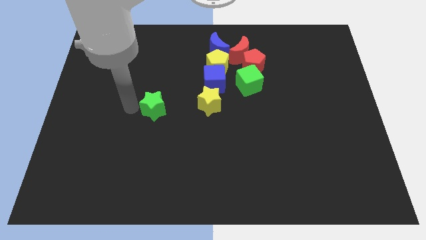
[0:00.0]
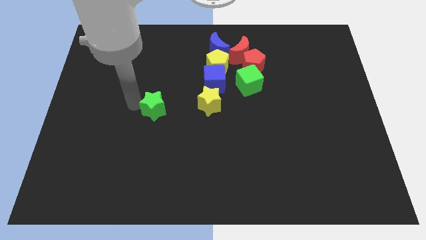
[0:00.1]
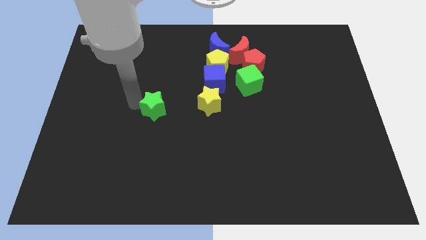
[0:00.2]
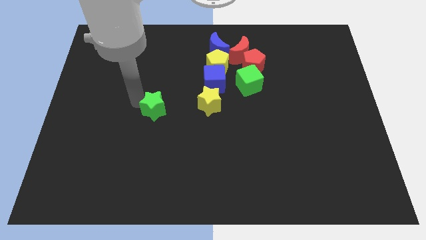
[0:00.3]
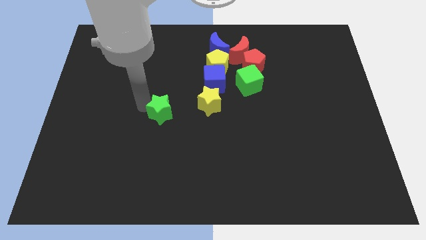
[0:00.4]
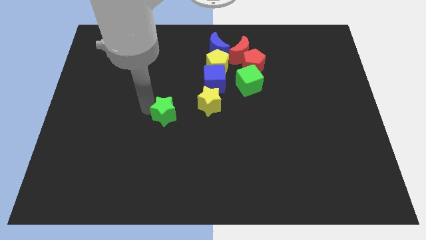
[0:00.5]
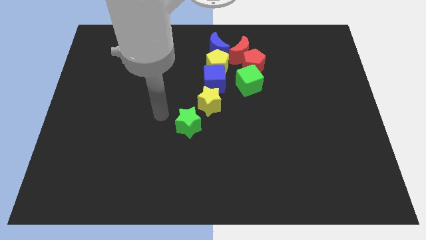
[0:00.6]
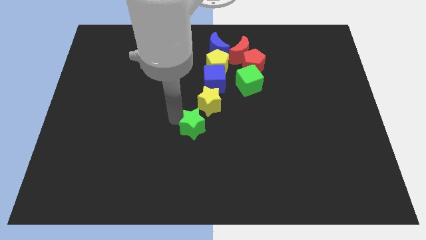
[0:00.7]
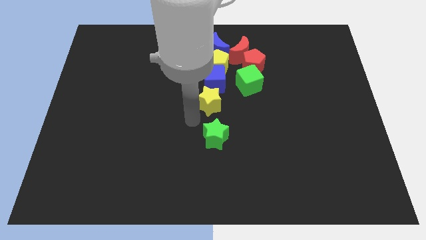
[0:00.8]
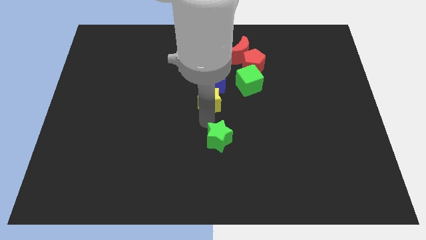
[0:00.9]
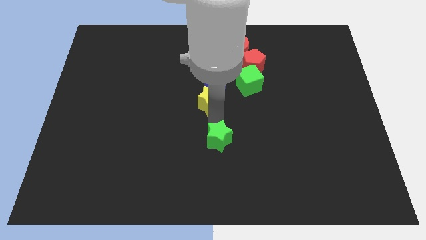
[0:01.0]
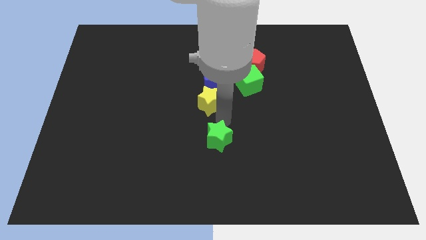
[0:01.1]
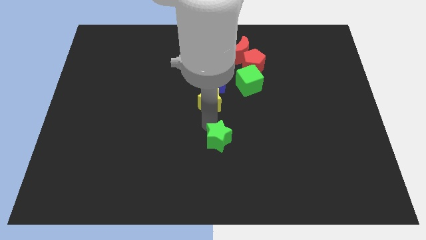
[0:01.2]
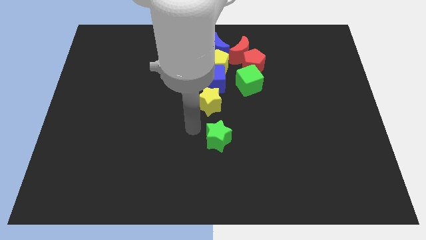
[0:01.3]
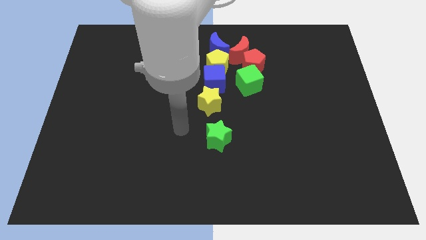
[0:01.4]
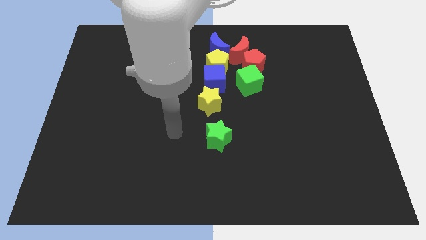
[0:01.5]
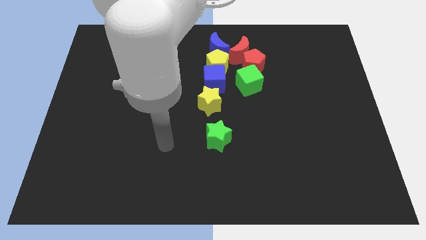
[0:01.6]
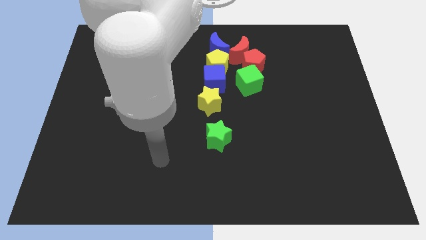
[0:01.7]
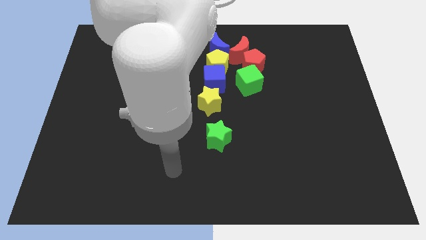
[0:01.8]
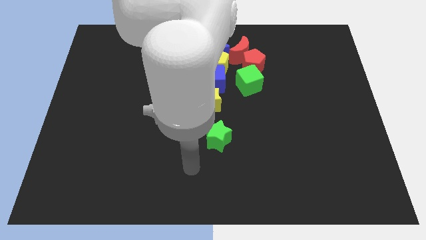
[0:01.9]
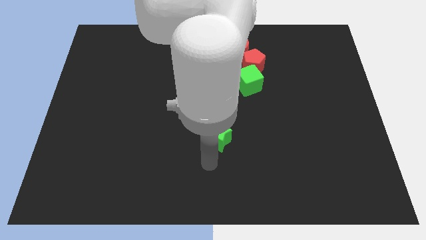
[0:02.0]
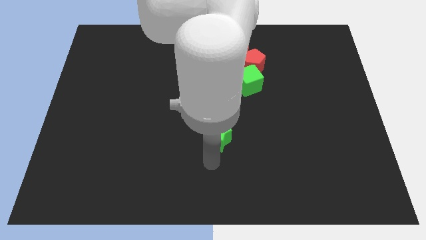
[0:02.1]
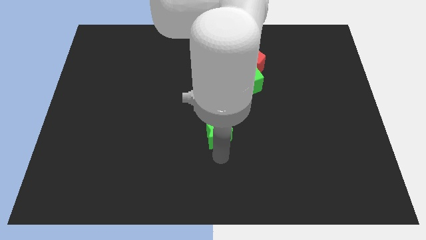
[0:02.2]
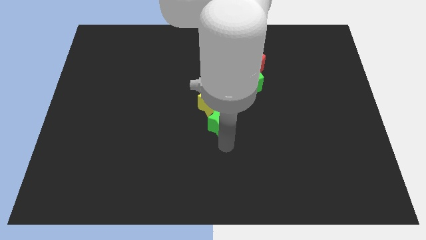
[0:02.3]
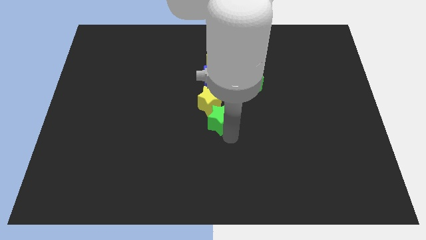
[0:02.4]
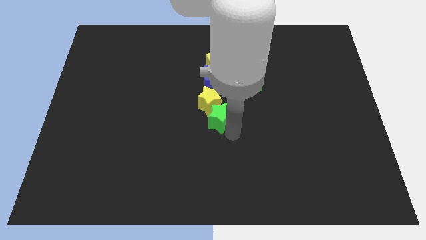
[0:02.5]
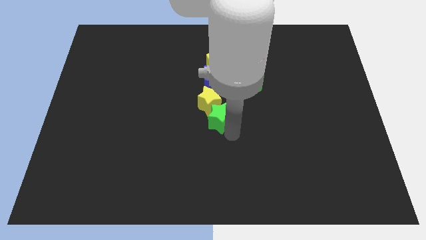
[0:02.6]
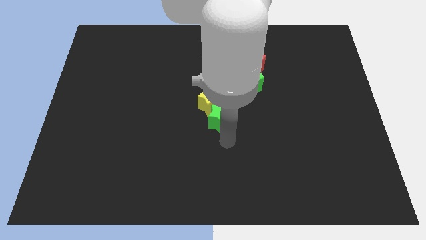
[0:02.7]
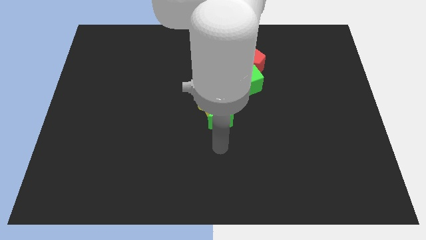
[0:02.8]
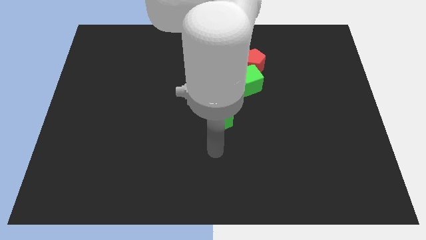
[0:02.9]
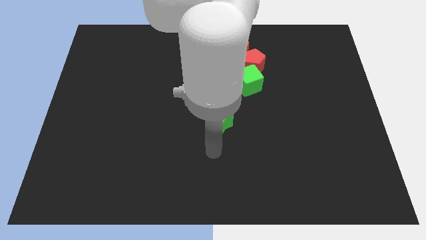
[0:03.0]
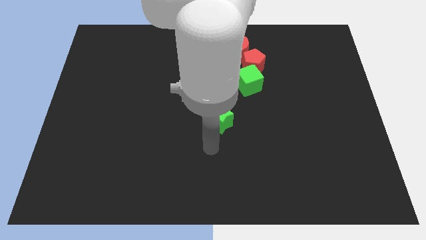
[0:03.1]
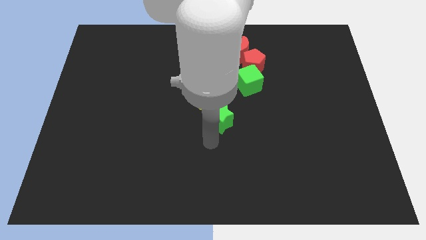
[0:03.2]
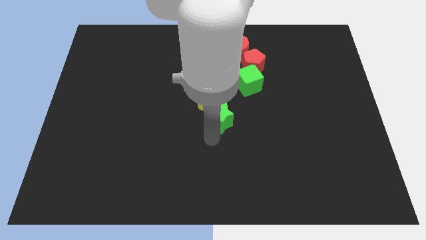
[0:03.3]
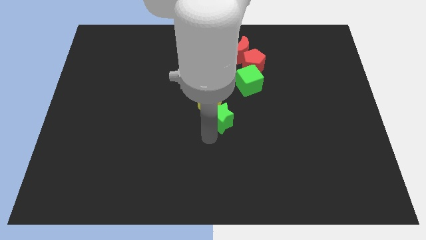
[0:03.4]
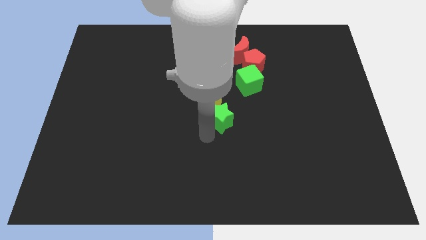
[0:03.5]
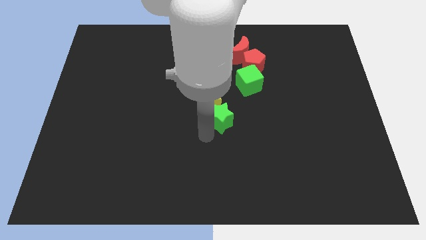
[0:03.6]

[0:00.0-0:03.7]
slide the green star below the yellow star

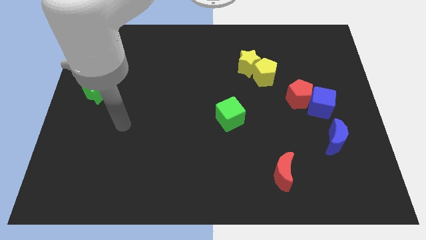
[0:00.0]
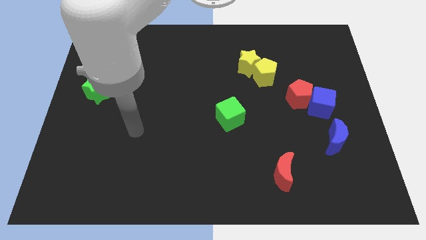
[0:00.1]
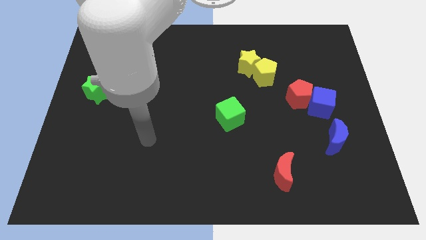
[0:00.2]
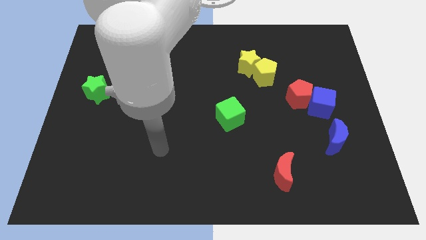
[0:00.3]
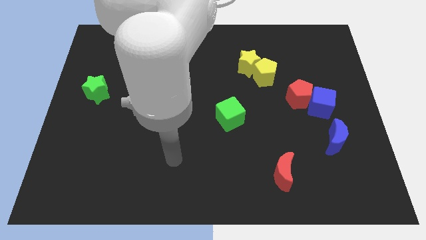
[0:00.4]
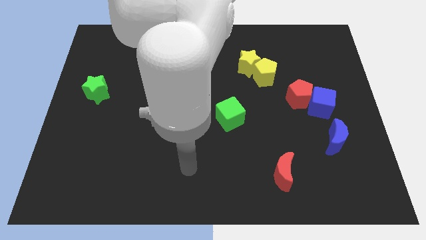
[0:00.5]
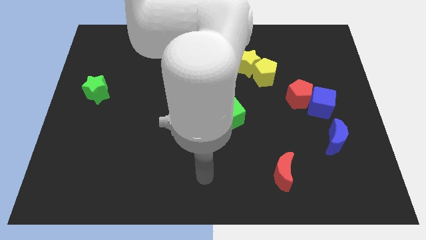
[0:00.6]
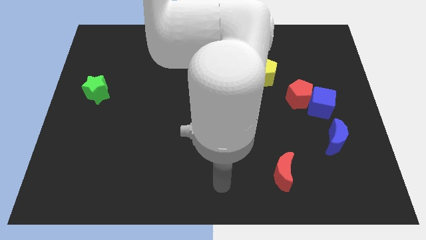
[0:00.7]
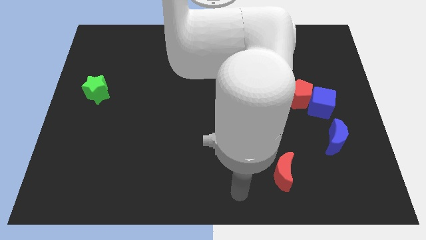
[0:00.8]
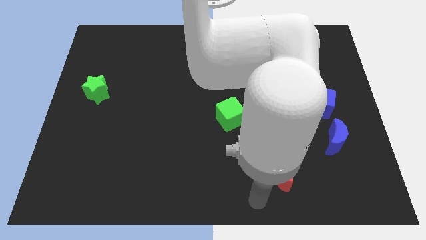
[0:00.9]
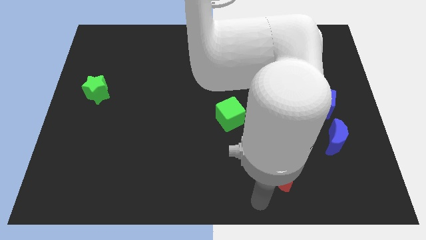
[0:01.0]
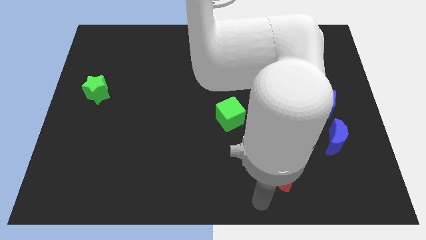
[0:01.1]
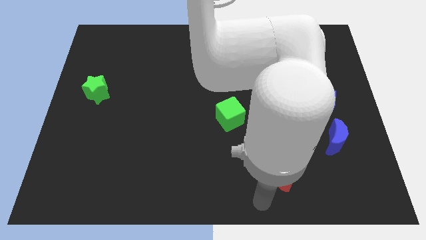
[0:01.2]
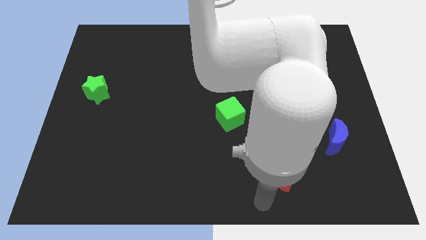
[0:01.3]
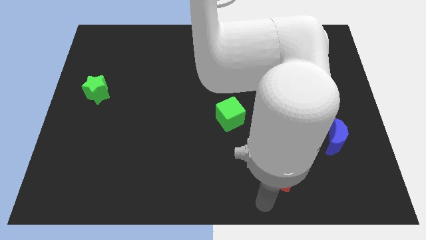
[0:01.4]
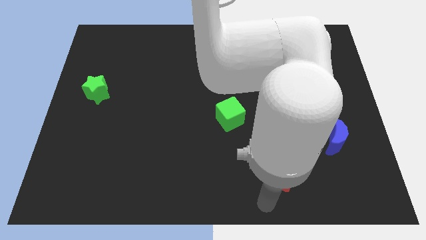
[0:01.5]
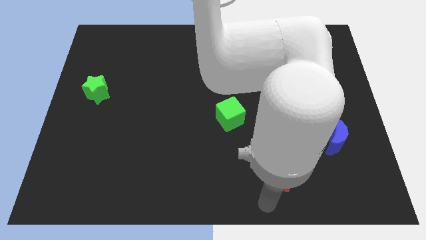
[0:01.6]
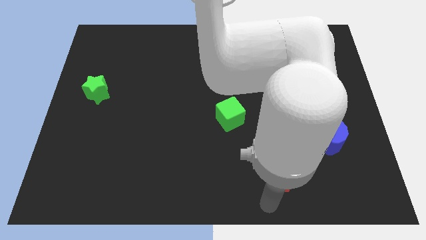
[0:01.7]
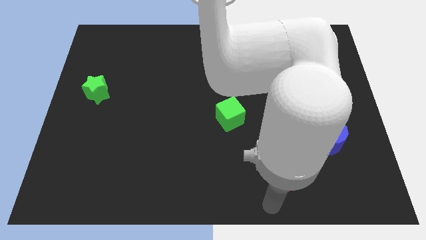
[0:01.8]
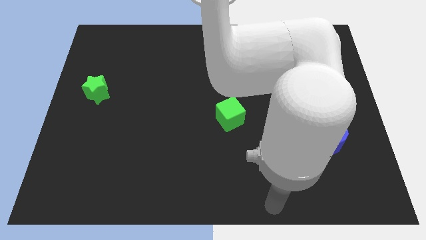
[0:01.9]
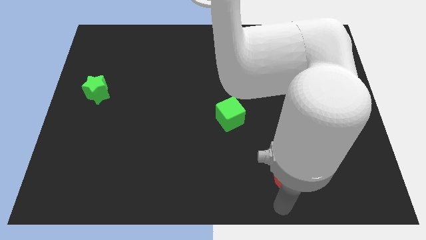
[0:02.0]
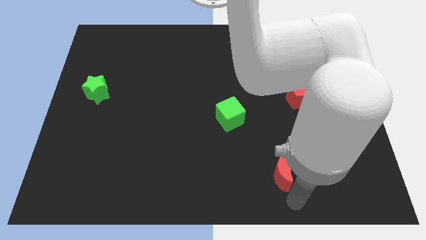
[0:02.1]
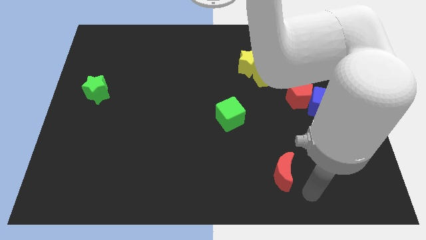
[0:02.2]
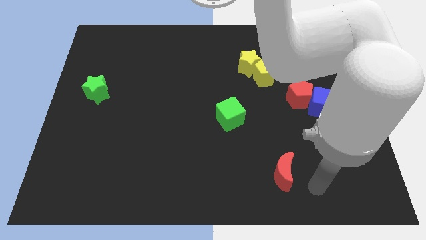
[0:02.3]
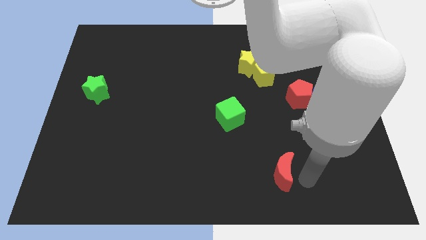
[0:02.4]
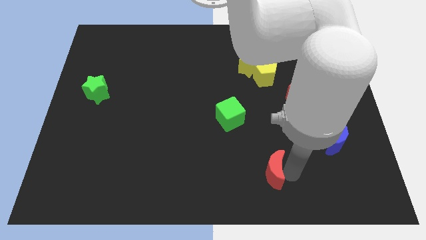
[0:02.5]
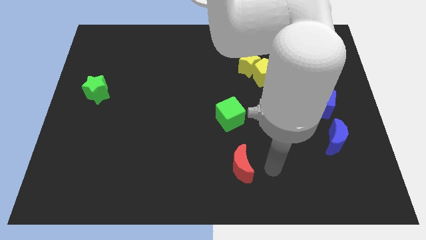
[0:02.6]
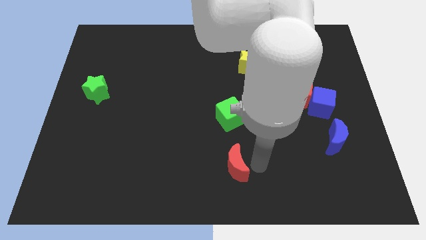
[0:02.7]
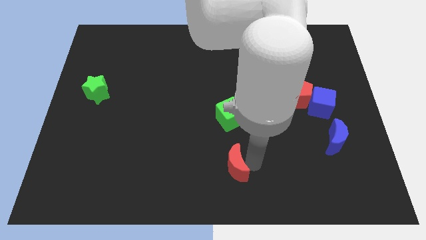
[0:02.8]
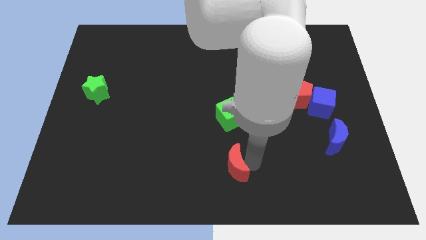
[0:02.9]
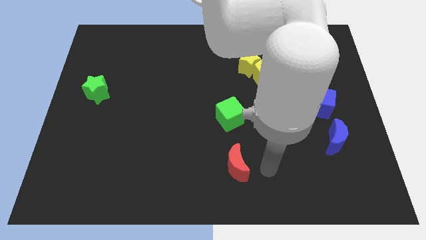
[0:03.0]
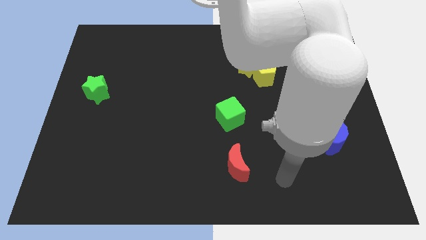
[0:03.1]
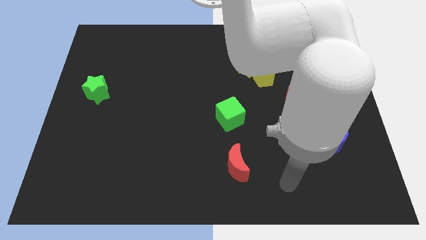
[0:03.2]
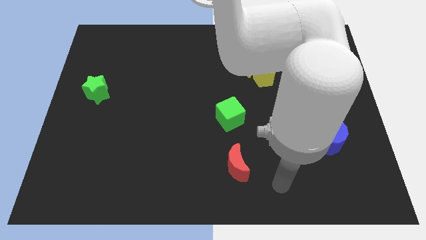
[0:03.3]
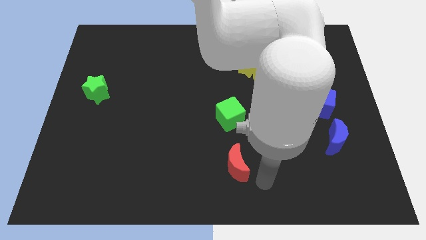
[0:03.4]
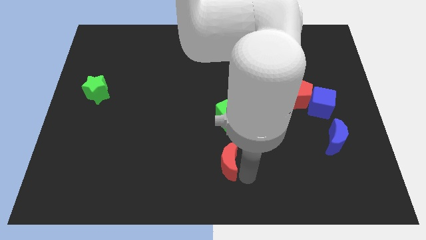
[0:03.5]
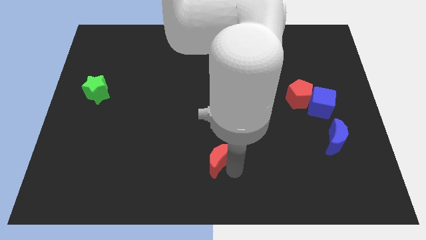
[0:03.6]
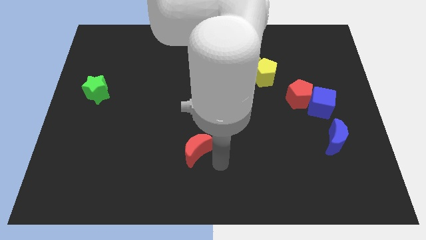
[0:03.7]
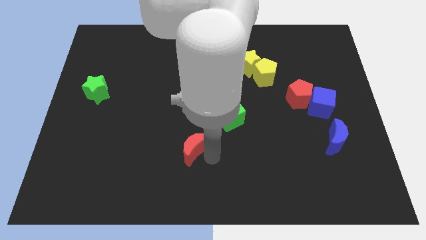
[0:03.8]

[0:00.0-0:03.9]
place red moon to the center

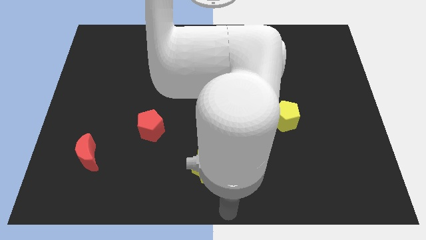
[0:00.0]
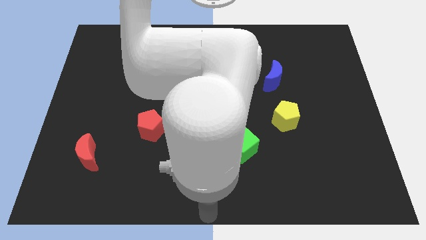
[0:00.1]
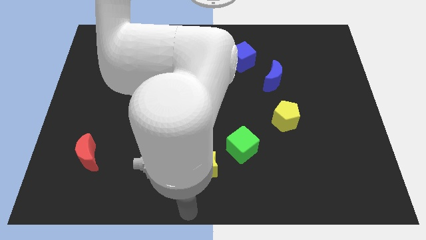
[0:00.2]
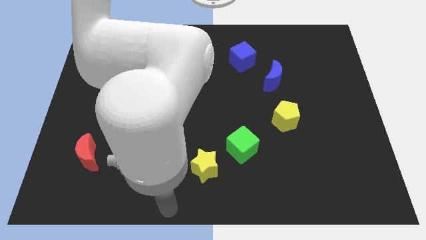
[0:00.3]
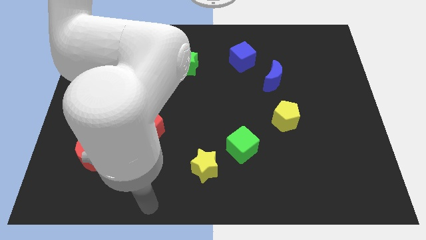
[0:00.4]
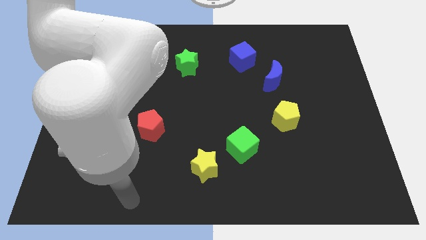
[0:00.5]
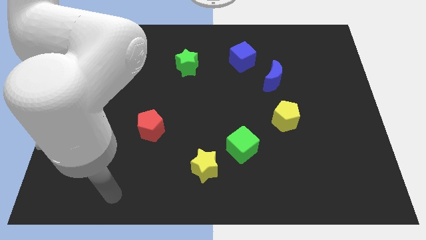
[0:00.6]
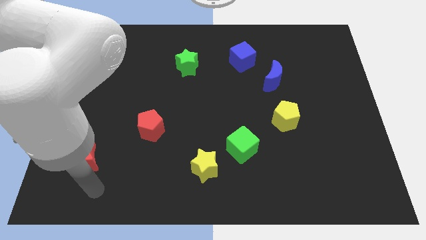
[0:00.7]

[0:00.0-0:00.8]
place your hand below the red crescent

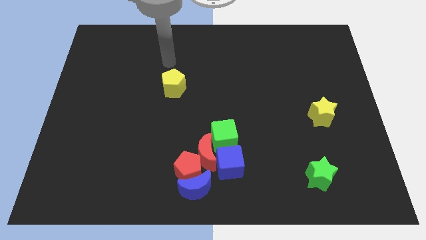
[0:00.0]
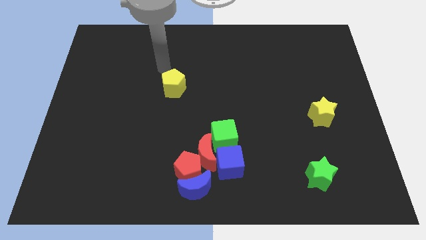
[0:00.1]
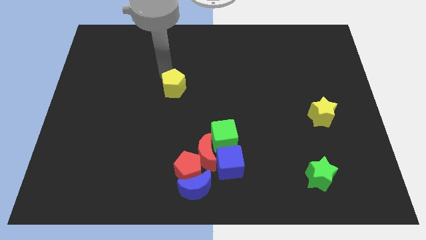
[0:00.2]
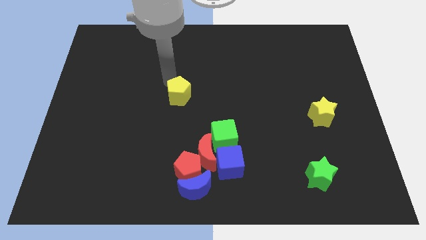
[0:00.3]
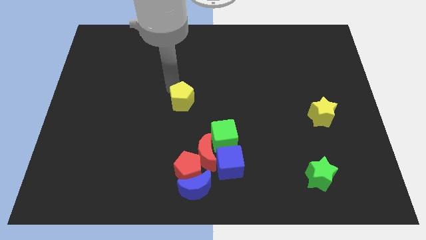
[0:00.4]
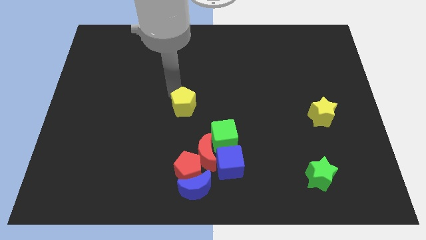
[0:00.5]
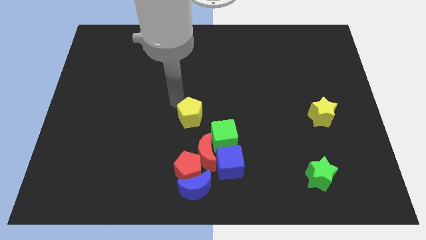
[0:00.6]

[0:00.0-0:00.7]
push yellow pentagon slightly downwards
